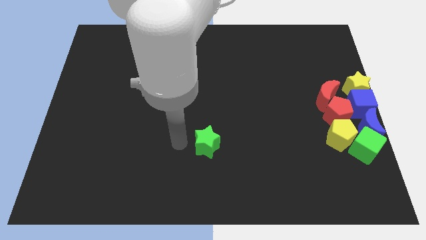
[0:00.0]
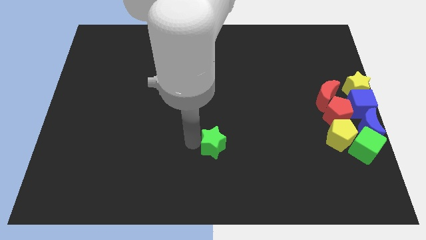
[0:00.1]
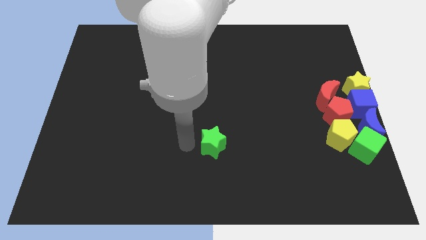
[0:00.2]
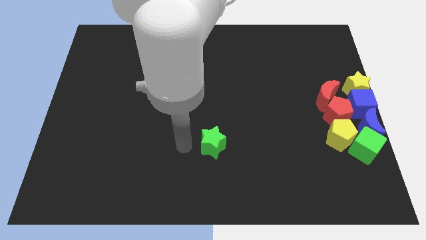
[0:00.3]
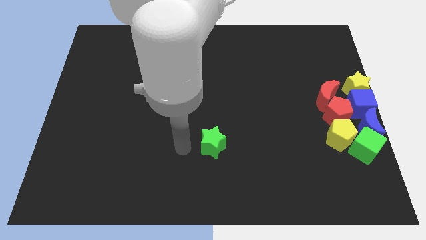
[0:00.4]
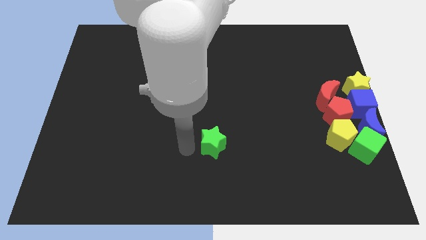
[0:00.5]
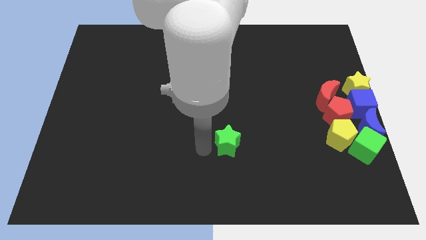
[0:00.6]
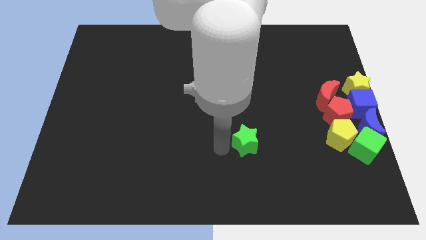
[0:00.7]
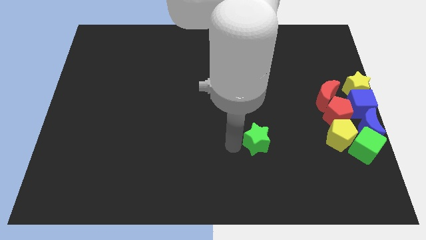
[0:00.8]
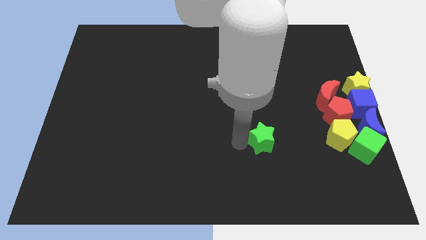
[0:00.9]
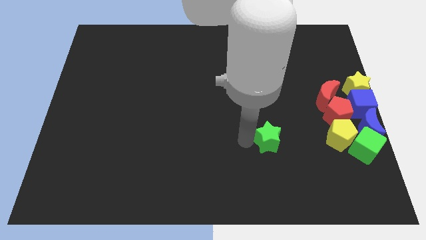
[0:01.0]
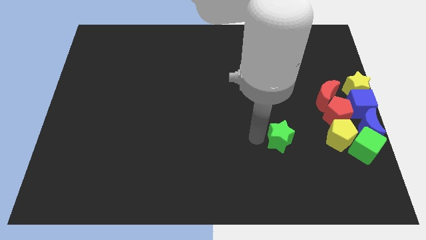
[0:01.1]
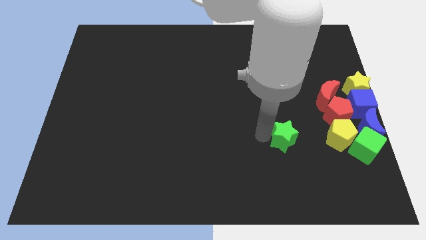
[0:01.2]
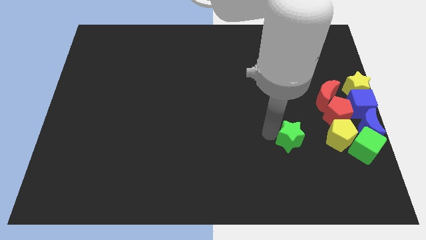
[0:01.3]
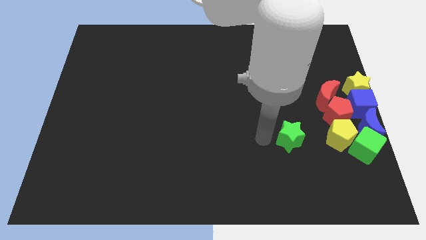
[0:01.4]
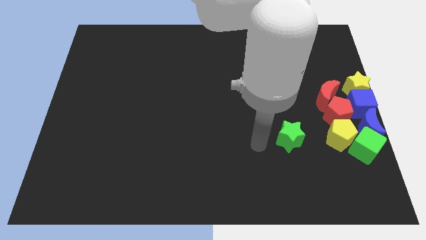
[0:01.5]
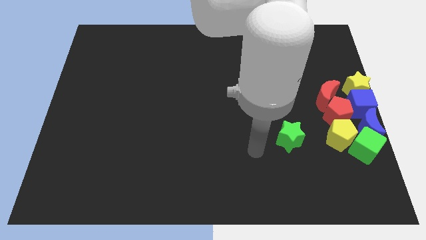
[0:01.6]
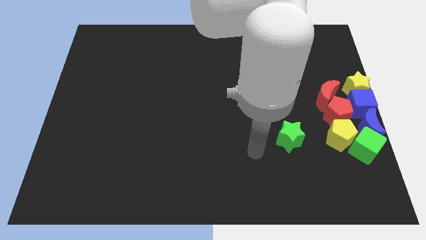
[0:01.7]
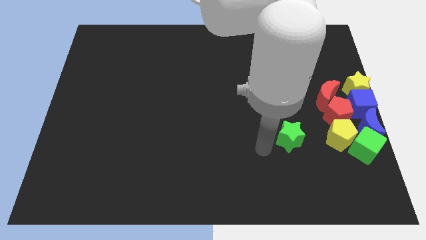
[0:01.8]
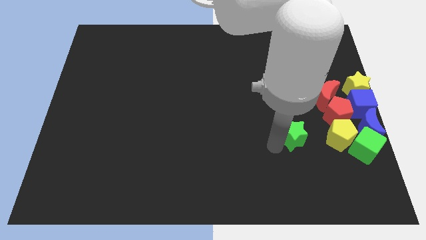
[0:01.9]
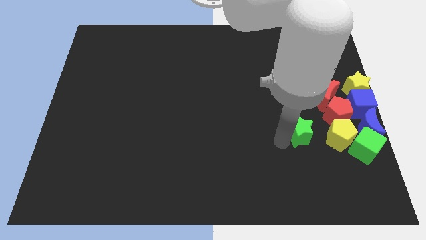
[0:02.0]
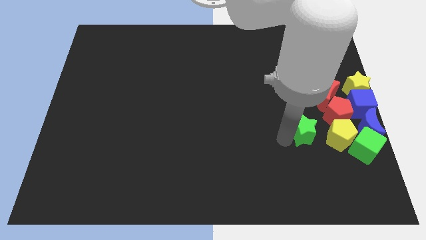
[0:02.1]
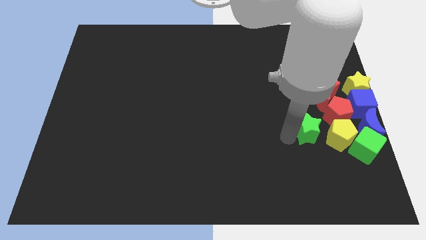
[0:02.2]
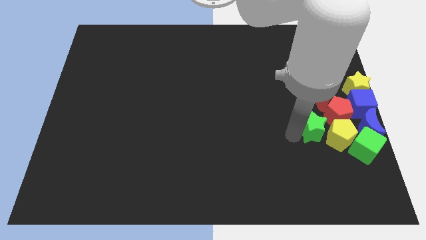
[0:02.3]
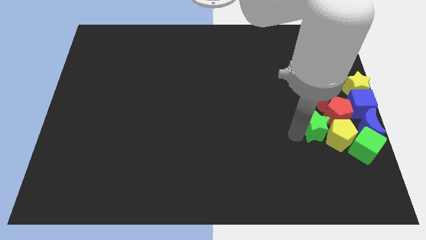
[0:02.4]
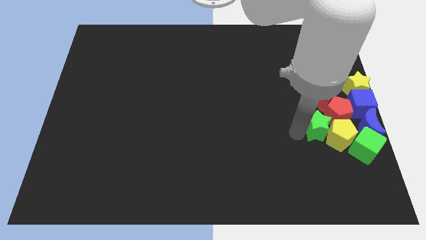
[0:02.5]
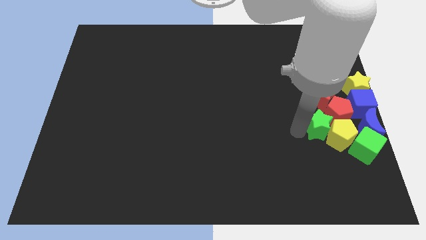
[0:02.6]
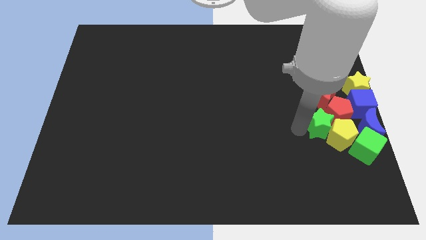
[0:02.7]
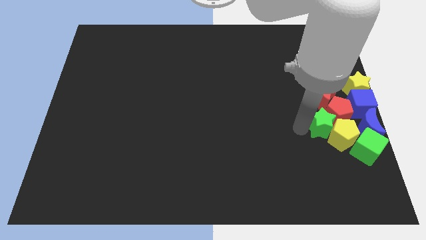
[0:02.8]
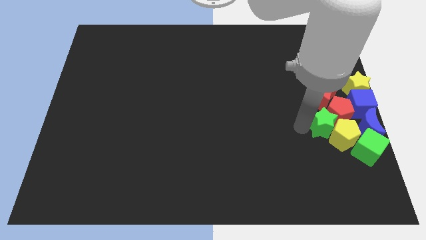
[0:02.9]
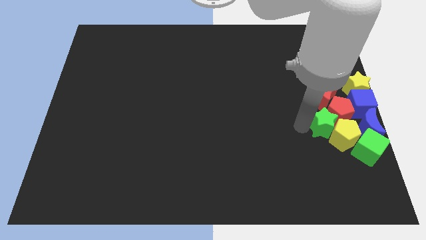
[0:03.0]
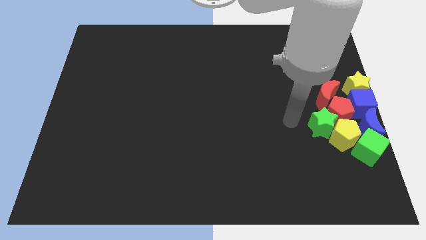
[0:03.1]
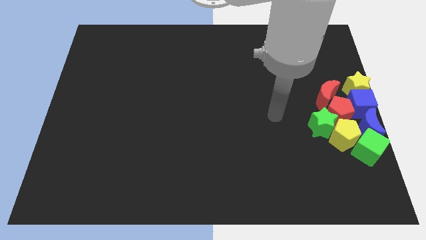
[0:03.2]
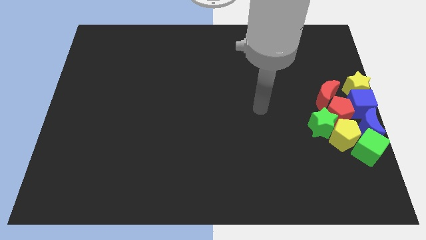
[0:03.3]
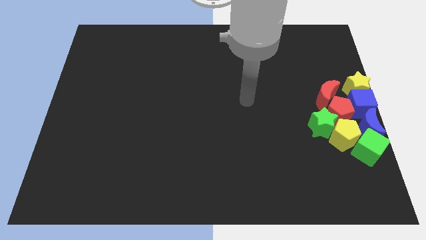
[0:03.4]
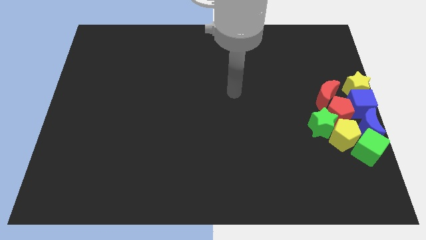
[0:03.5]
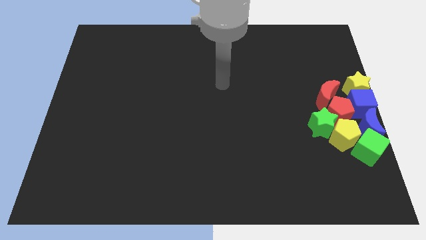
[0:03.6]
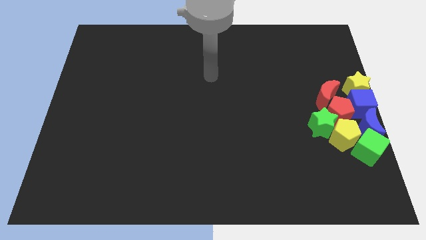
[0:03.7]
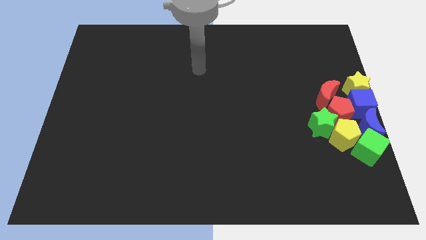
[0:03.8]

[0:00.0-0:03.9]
push the green star to the right center of the board

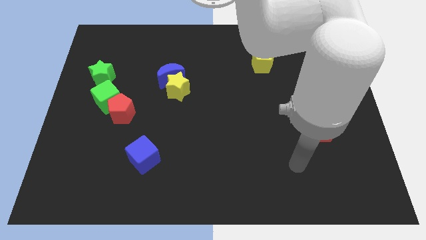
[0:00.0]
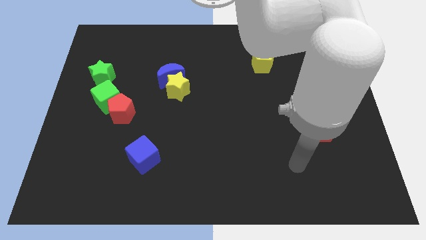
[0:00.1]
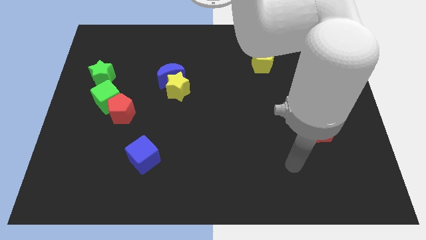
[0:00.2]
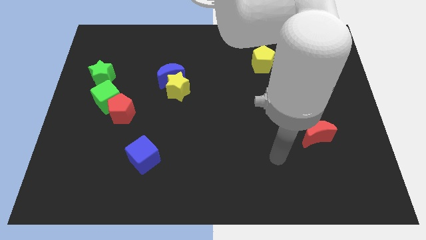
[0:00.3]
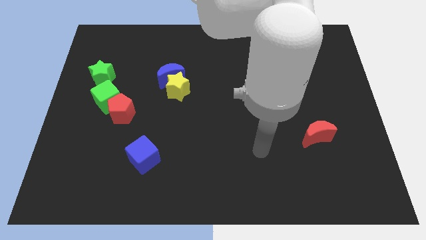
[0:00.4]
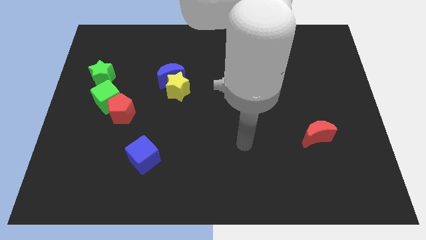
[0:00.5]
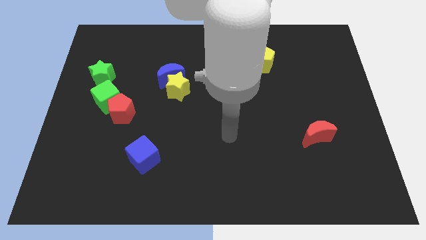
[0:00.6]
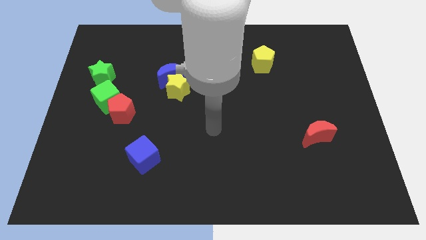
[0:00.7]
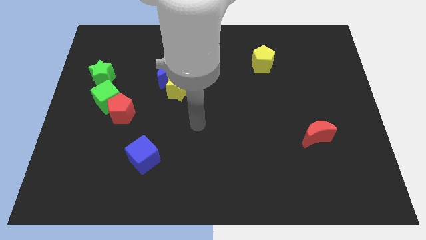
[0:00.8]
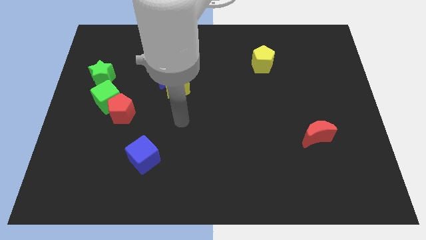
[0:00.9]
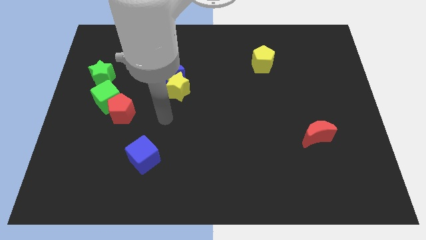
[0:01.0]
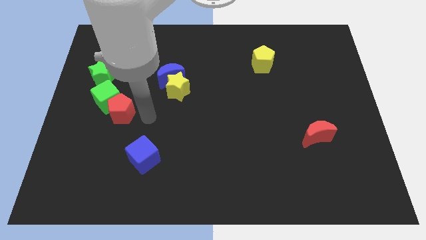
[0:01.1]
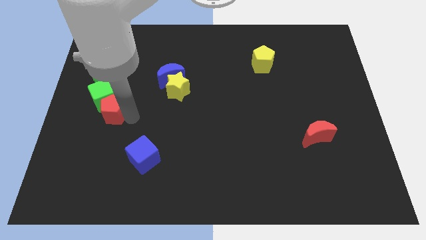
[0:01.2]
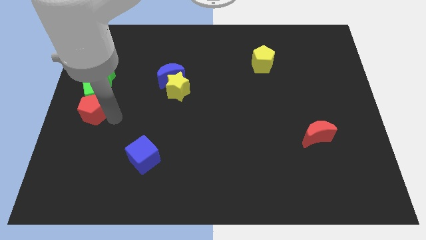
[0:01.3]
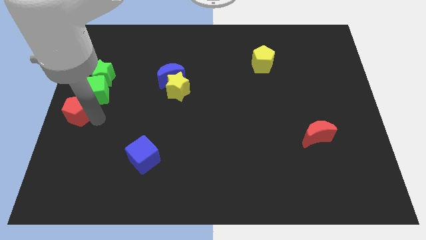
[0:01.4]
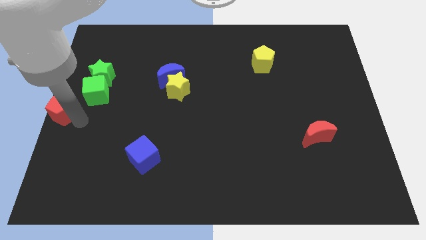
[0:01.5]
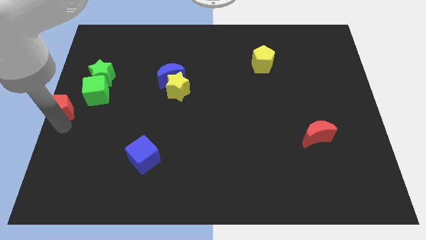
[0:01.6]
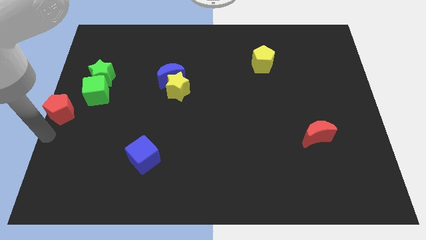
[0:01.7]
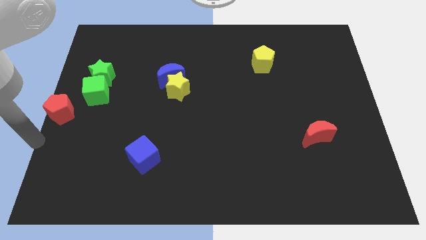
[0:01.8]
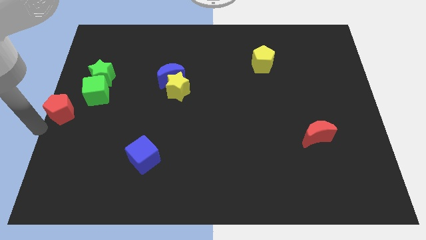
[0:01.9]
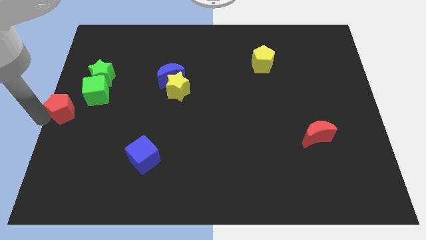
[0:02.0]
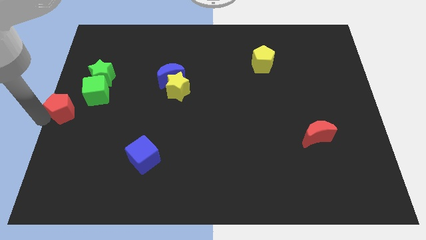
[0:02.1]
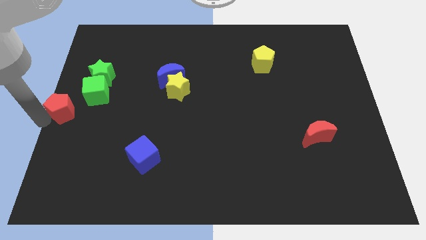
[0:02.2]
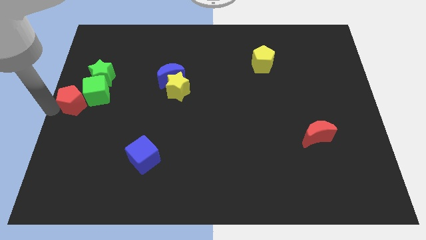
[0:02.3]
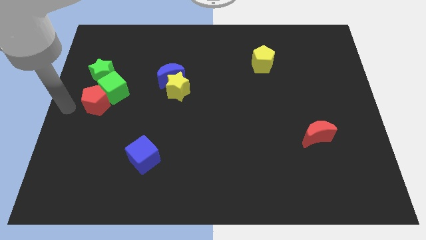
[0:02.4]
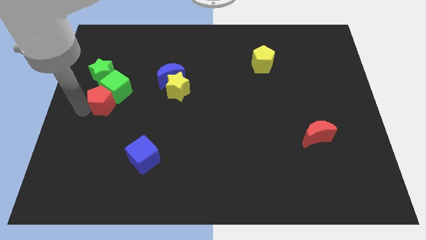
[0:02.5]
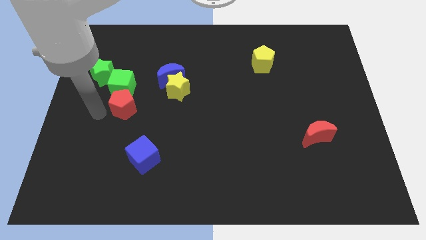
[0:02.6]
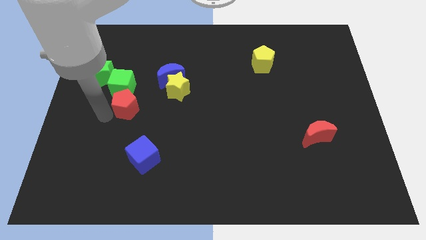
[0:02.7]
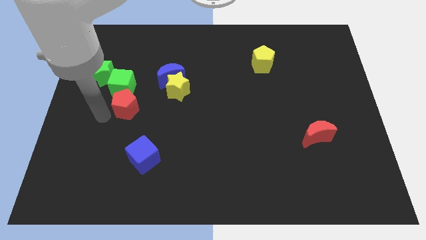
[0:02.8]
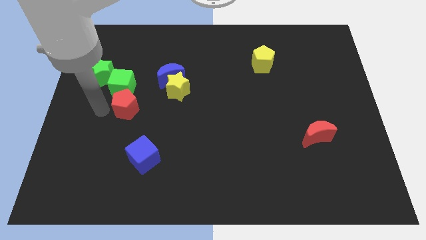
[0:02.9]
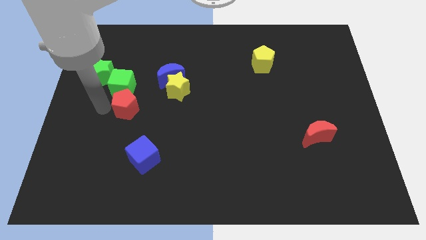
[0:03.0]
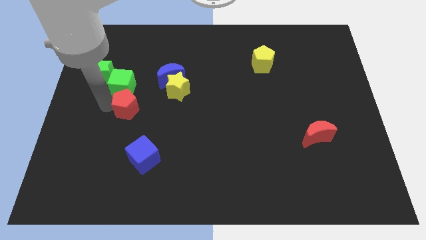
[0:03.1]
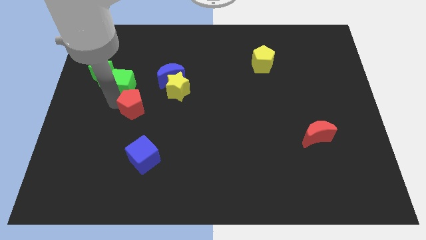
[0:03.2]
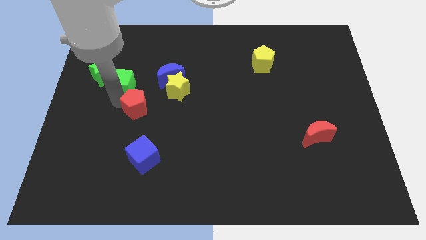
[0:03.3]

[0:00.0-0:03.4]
push the red pentagon to the bottom of the green cube

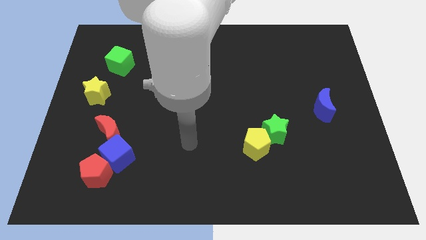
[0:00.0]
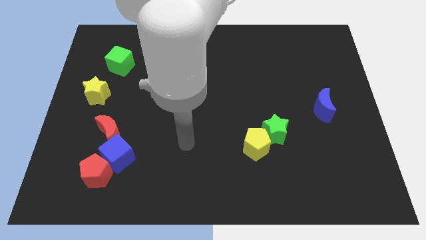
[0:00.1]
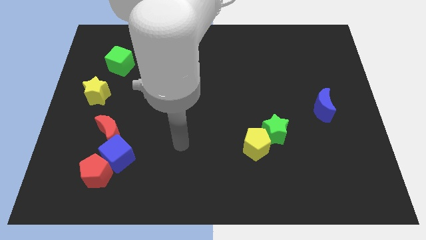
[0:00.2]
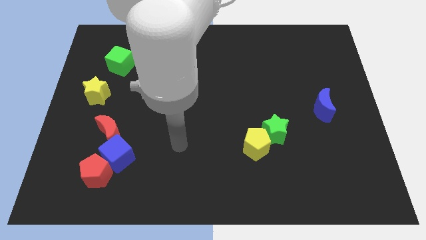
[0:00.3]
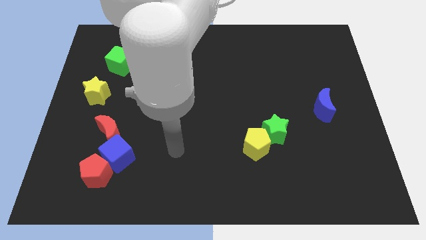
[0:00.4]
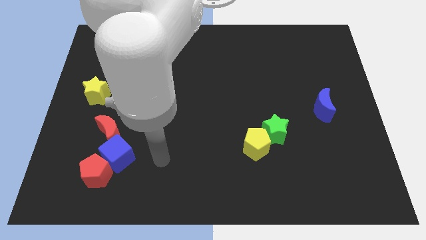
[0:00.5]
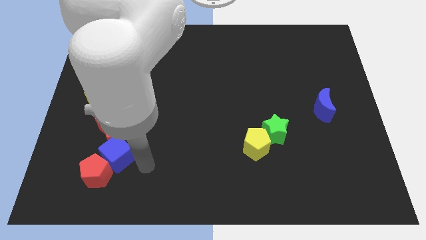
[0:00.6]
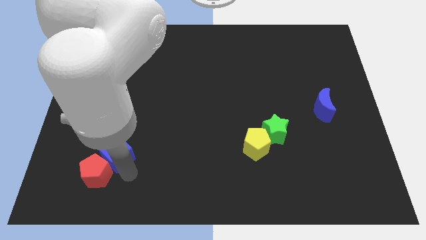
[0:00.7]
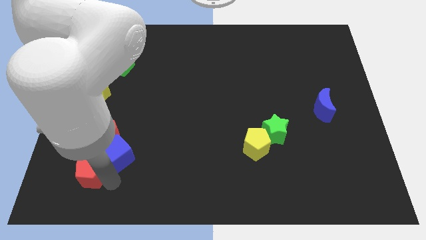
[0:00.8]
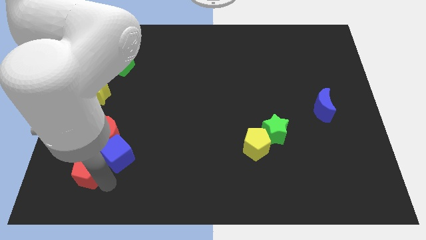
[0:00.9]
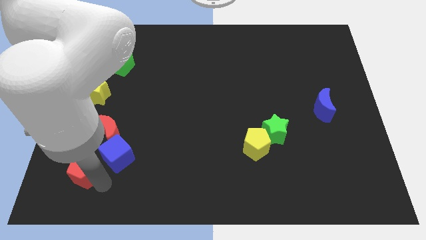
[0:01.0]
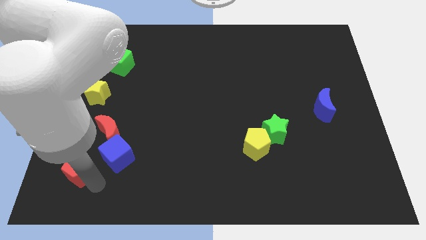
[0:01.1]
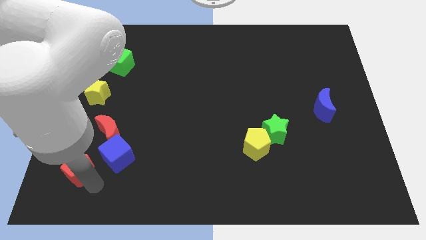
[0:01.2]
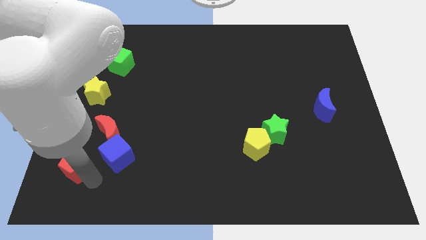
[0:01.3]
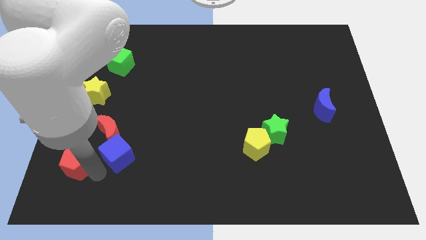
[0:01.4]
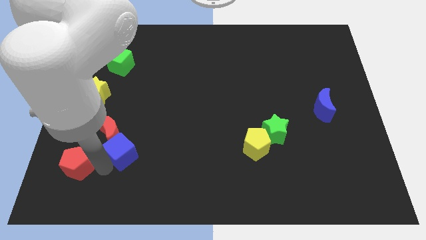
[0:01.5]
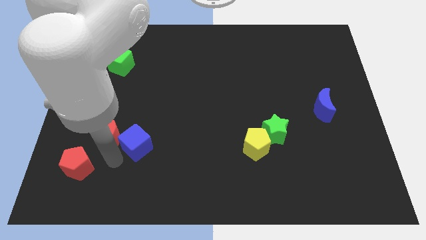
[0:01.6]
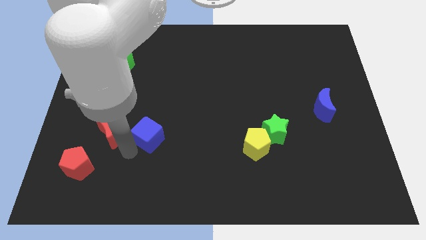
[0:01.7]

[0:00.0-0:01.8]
push the blue cube slightly upwards
